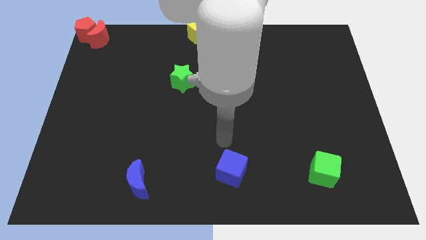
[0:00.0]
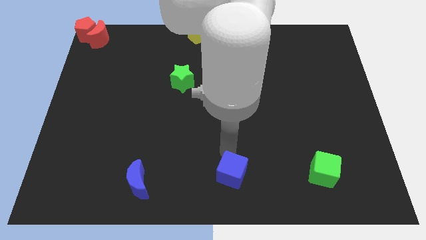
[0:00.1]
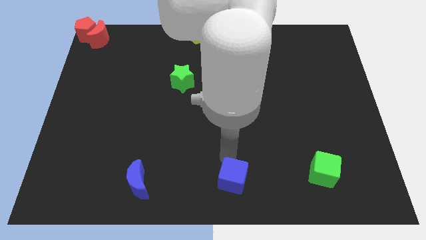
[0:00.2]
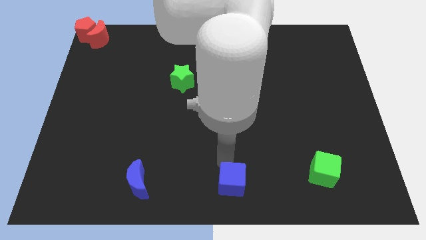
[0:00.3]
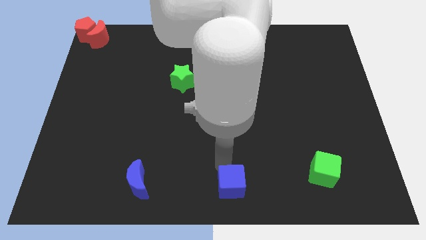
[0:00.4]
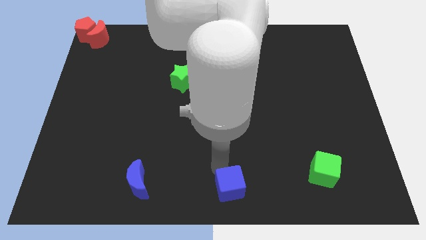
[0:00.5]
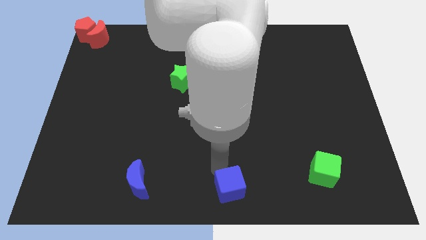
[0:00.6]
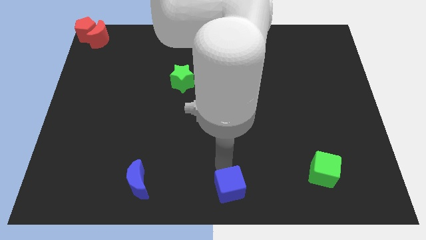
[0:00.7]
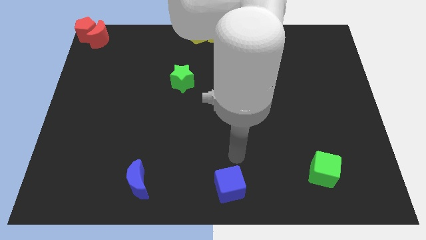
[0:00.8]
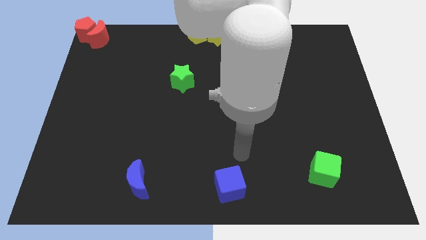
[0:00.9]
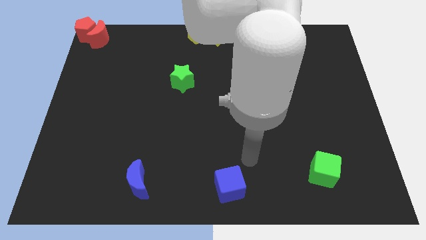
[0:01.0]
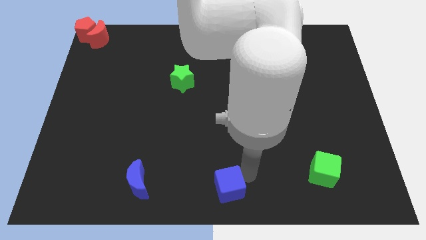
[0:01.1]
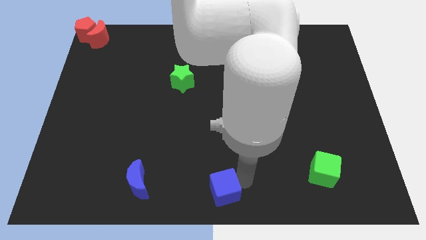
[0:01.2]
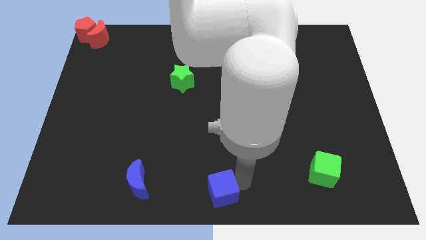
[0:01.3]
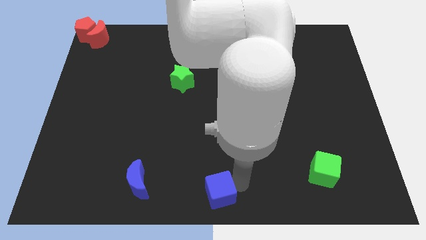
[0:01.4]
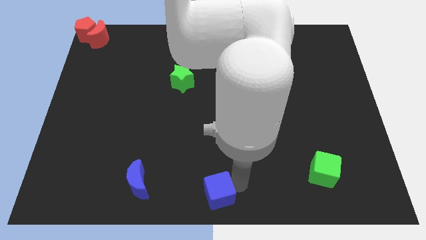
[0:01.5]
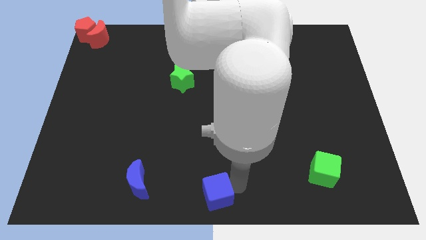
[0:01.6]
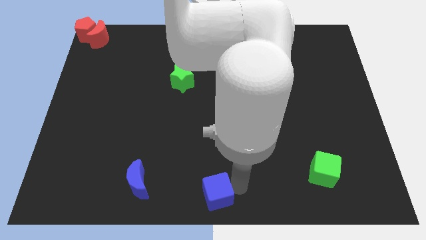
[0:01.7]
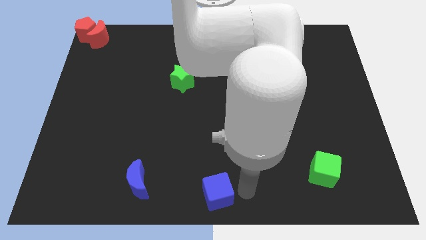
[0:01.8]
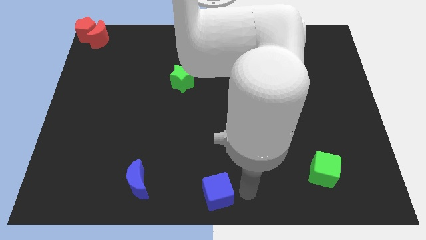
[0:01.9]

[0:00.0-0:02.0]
push the blue cube to the bottom center of the board

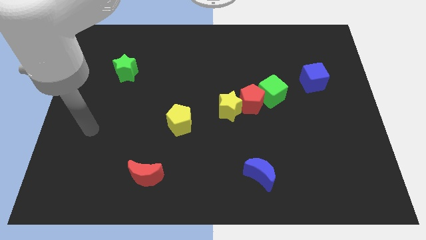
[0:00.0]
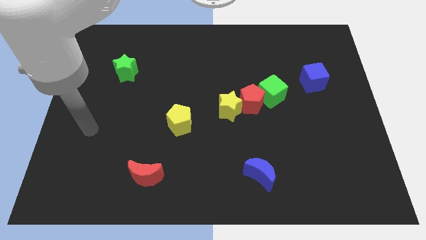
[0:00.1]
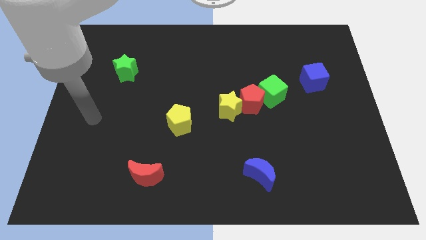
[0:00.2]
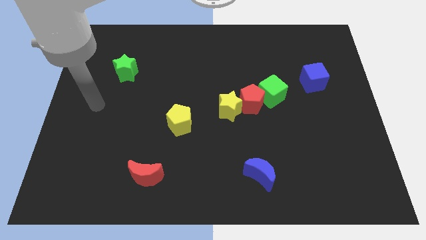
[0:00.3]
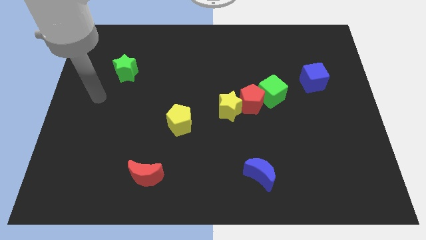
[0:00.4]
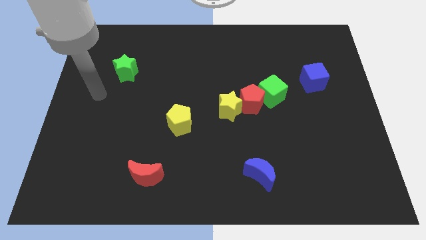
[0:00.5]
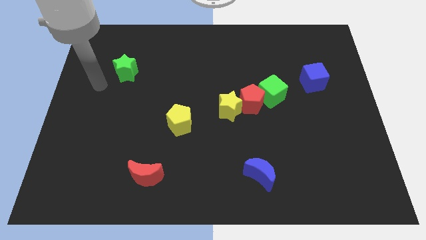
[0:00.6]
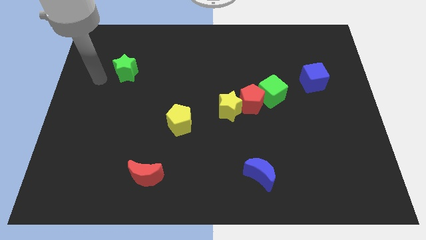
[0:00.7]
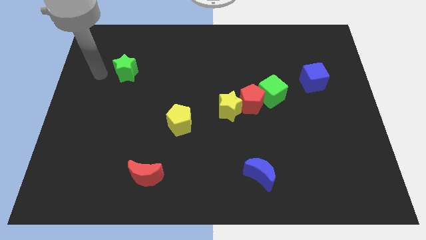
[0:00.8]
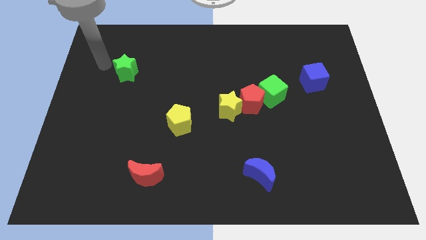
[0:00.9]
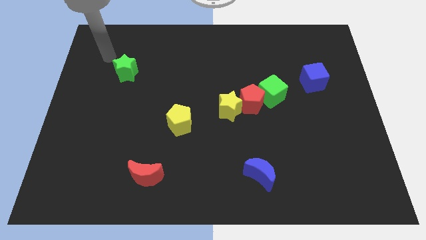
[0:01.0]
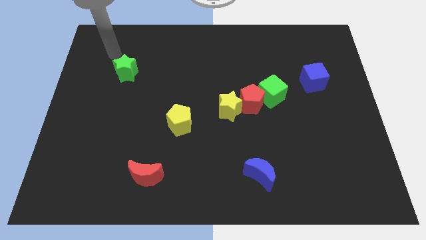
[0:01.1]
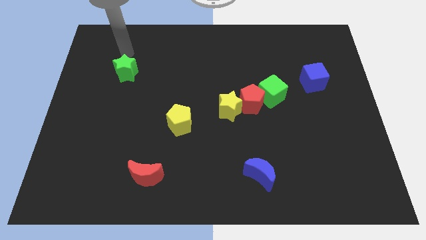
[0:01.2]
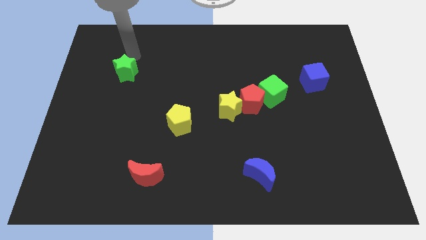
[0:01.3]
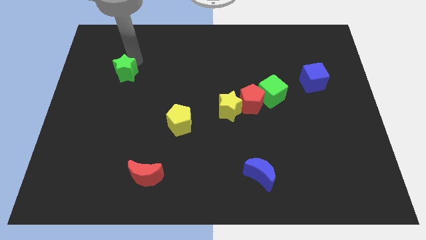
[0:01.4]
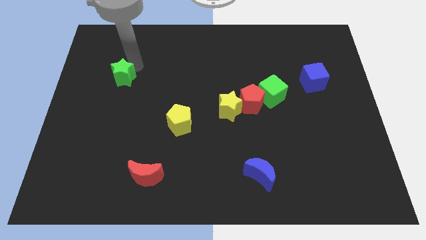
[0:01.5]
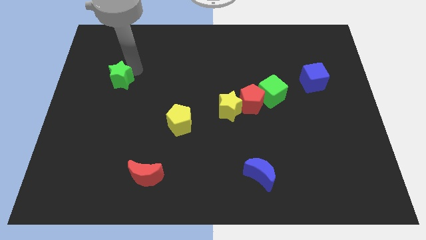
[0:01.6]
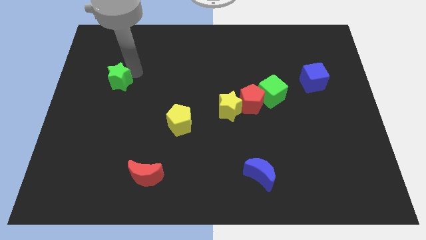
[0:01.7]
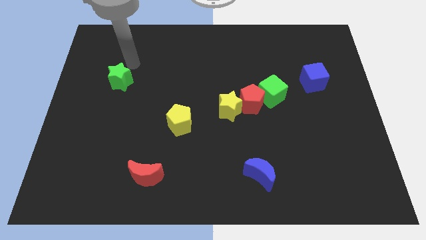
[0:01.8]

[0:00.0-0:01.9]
move your arm near green star

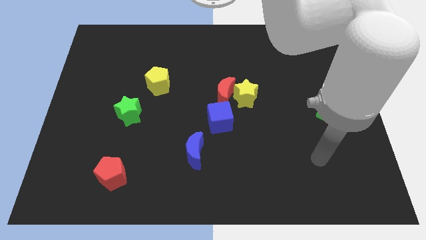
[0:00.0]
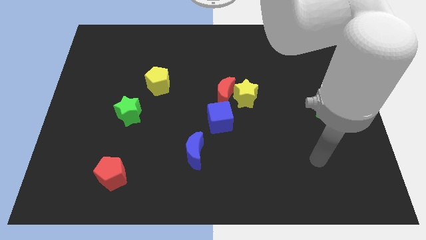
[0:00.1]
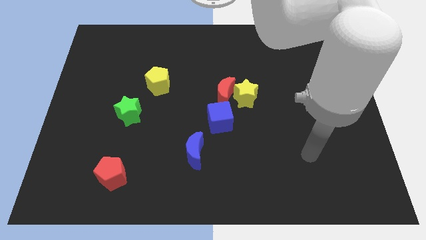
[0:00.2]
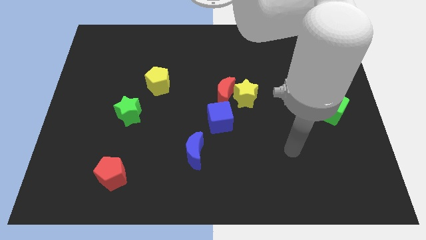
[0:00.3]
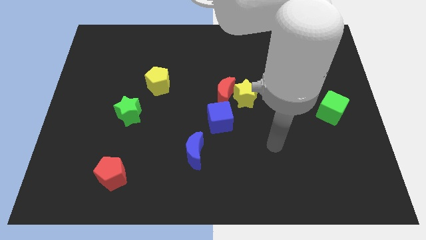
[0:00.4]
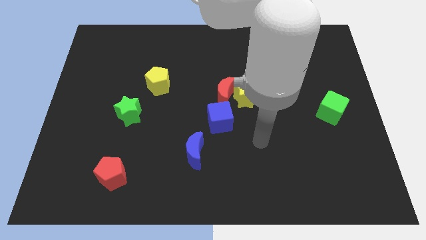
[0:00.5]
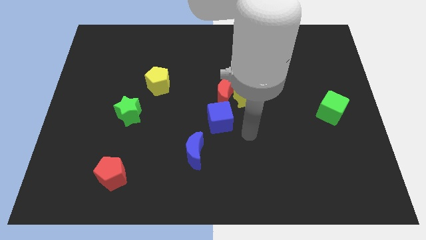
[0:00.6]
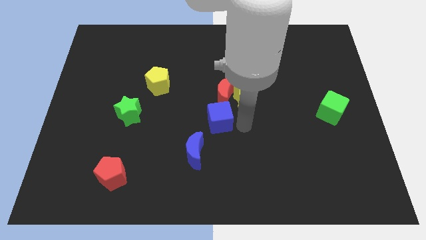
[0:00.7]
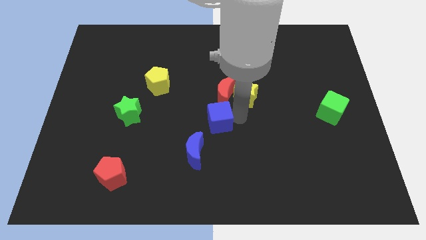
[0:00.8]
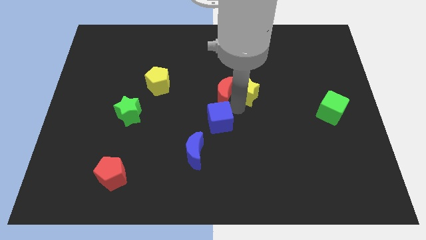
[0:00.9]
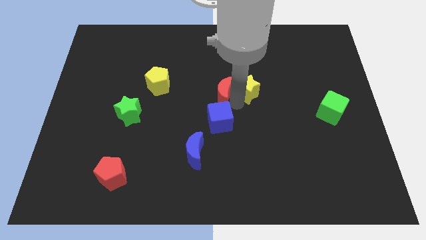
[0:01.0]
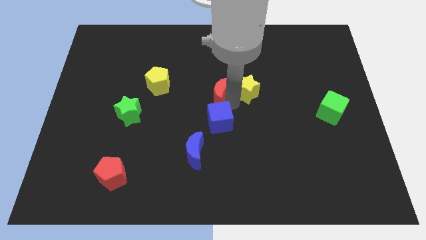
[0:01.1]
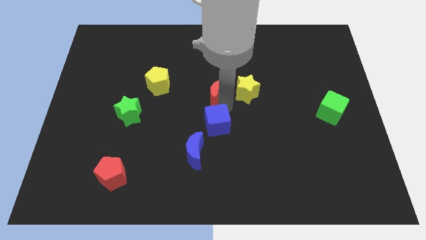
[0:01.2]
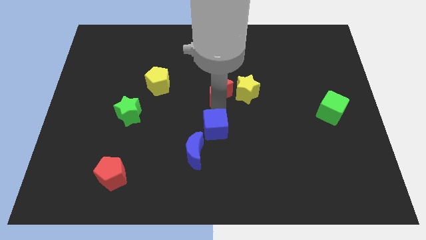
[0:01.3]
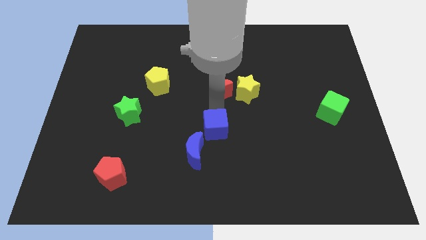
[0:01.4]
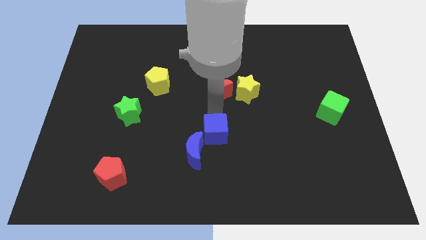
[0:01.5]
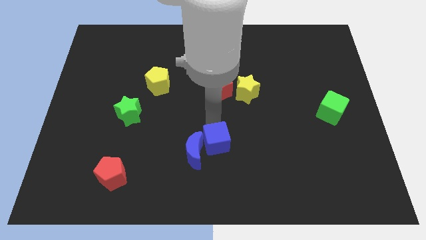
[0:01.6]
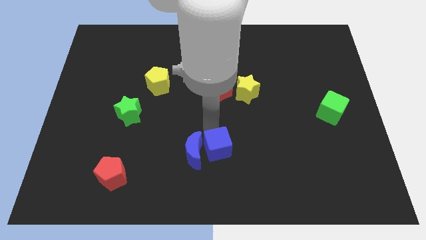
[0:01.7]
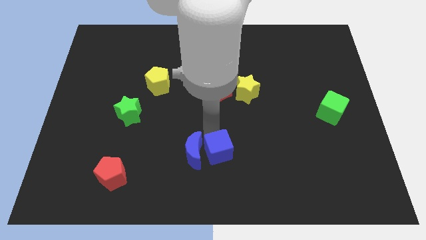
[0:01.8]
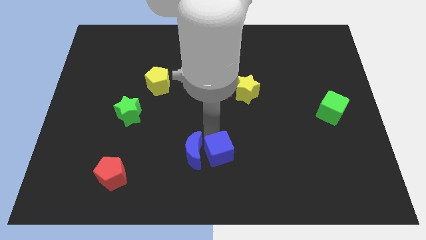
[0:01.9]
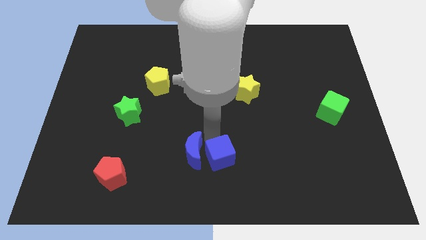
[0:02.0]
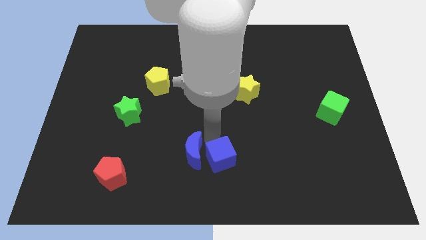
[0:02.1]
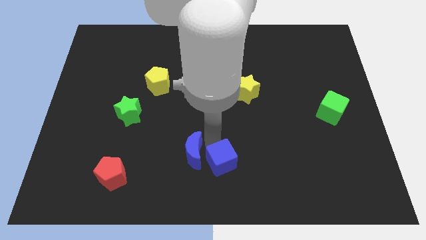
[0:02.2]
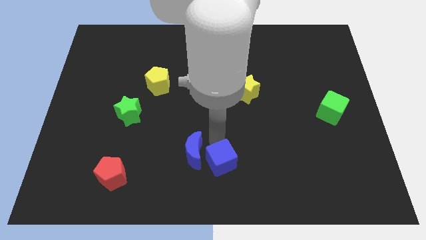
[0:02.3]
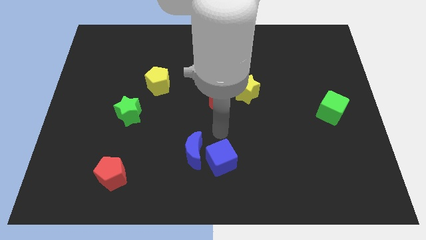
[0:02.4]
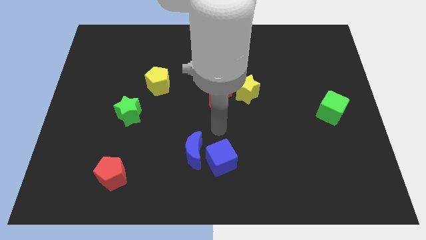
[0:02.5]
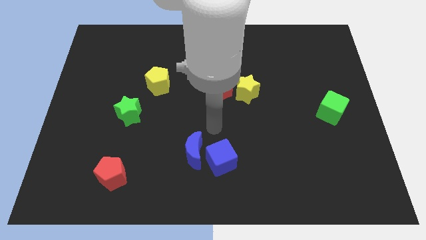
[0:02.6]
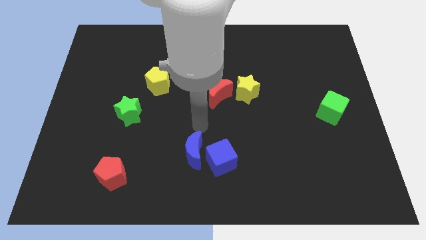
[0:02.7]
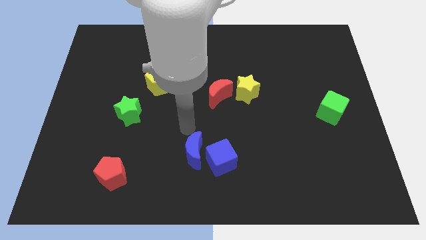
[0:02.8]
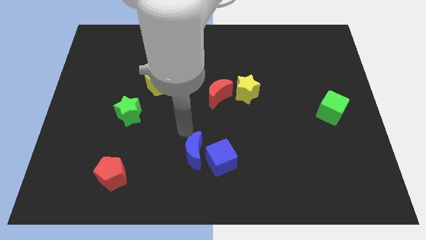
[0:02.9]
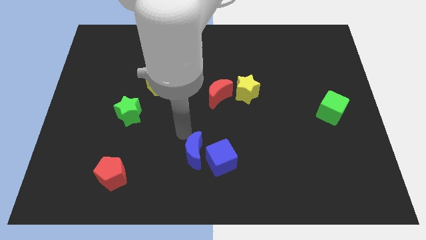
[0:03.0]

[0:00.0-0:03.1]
place blue cube to the right of blue moon

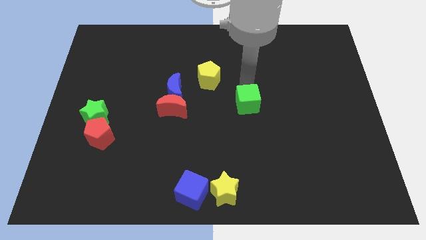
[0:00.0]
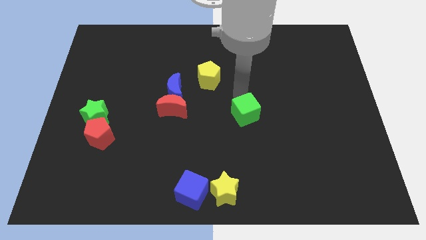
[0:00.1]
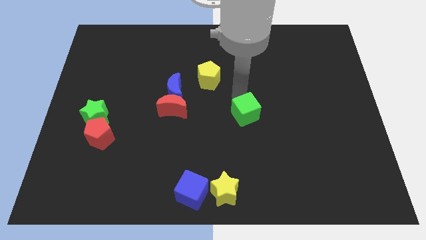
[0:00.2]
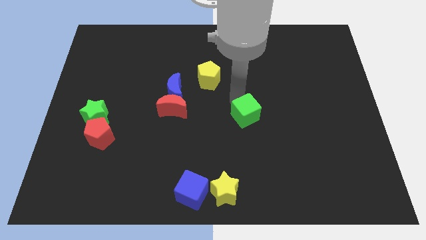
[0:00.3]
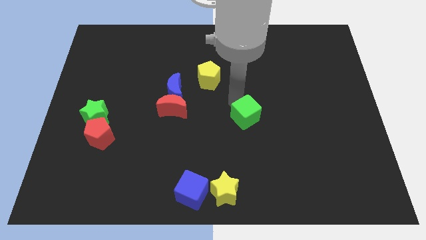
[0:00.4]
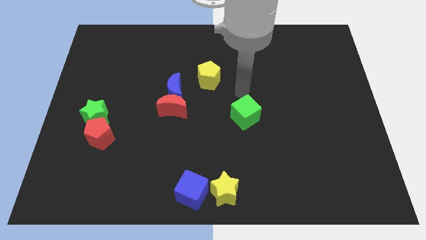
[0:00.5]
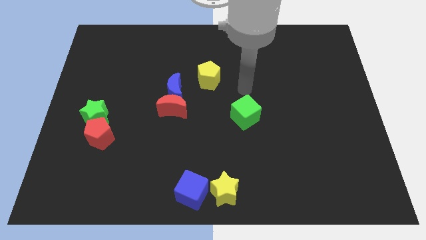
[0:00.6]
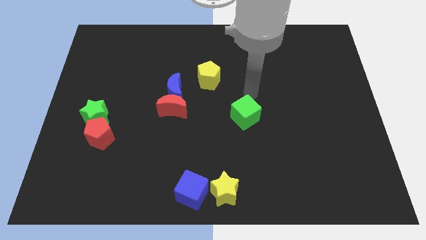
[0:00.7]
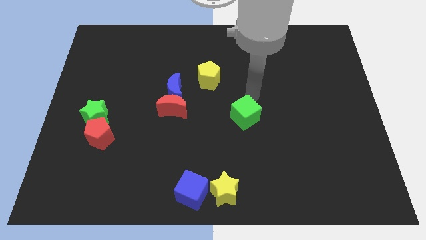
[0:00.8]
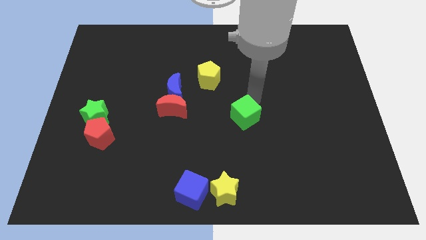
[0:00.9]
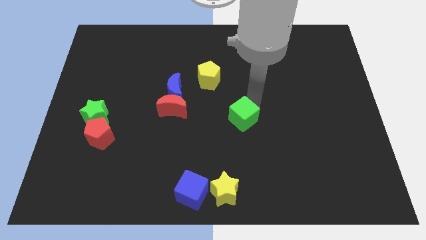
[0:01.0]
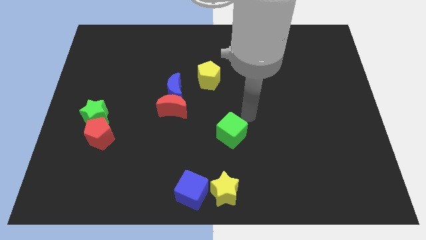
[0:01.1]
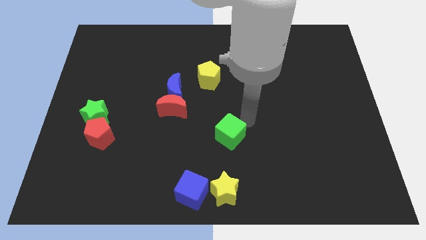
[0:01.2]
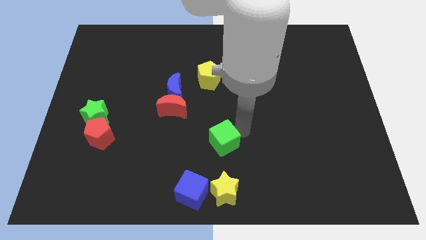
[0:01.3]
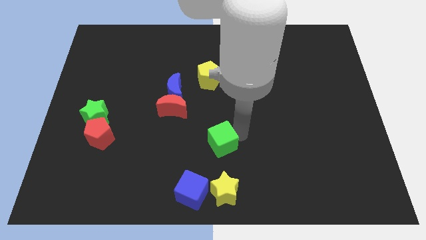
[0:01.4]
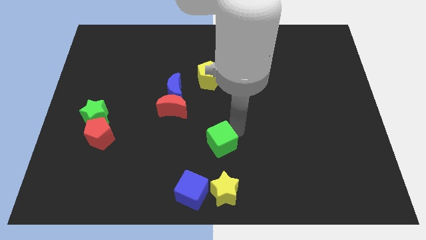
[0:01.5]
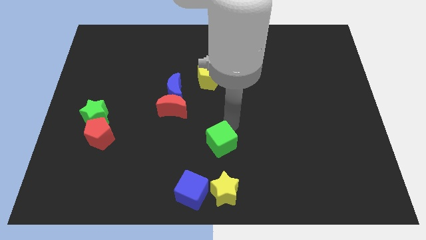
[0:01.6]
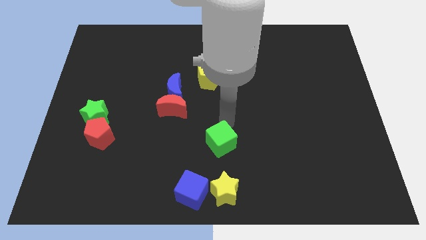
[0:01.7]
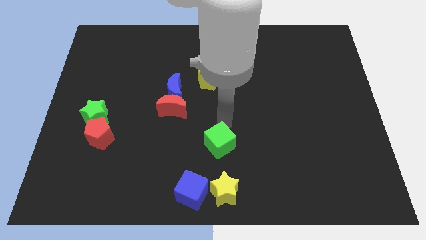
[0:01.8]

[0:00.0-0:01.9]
place the green cube in between the yellow pentagon and yellow star

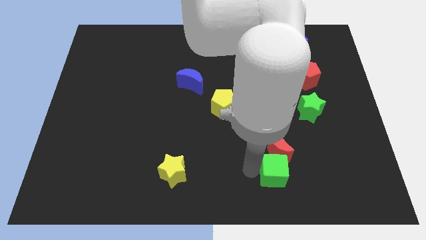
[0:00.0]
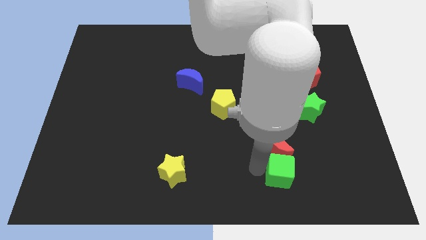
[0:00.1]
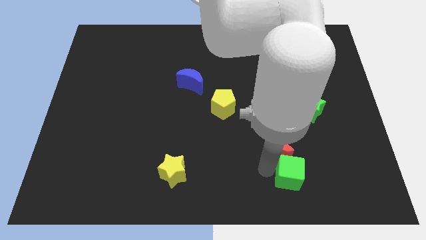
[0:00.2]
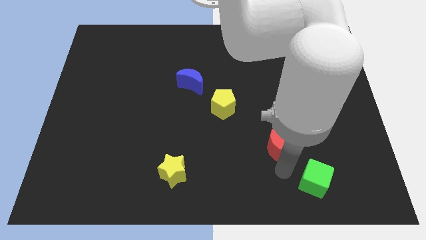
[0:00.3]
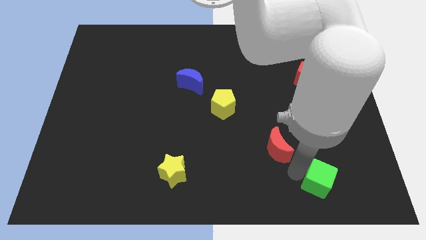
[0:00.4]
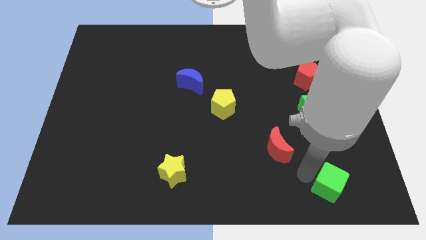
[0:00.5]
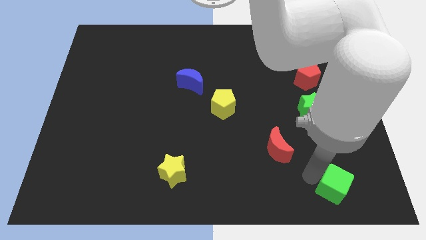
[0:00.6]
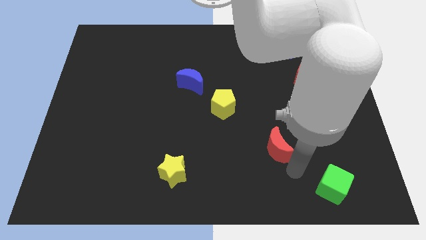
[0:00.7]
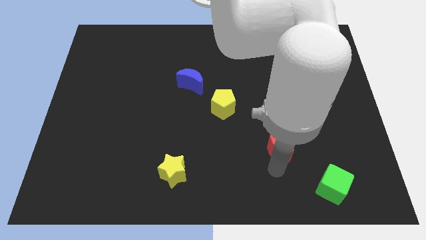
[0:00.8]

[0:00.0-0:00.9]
move the green block to the right bottom of the sheet
